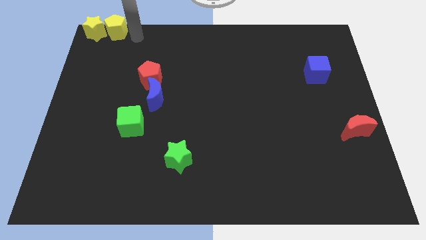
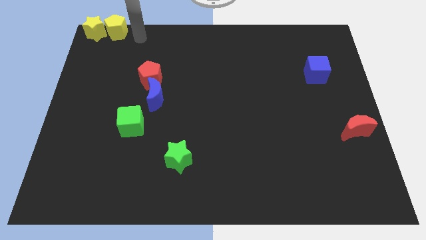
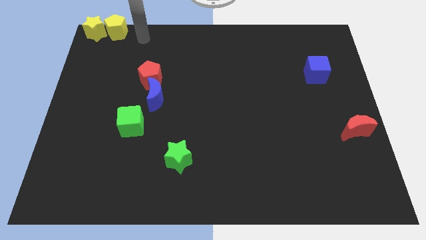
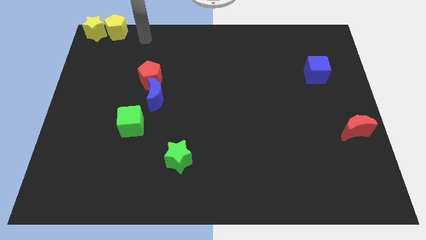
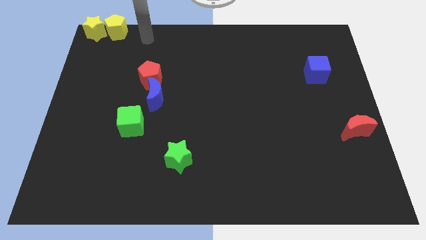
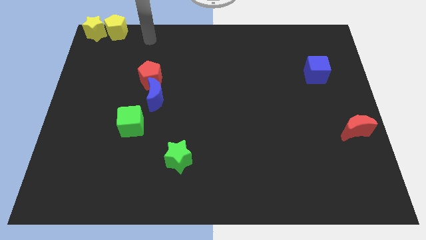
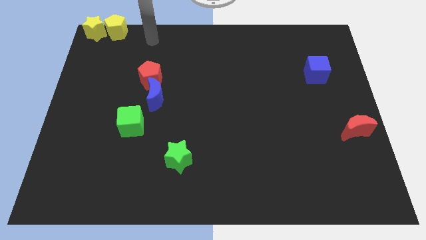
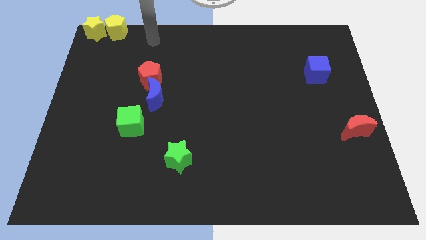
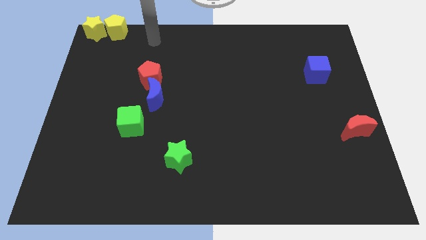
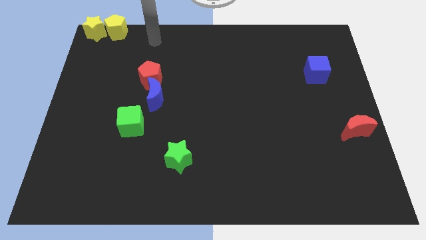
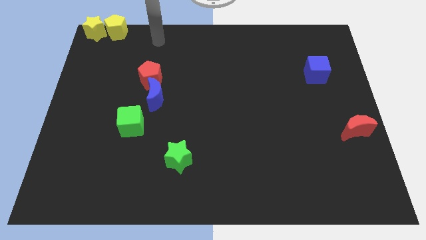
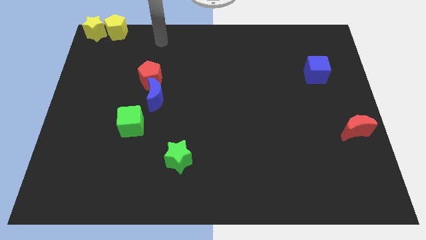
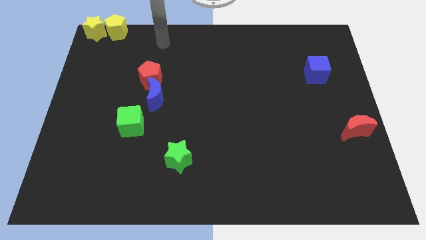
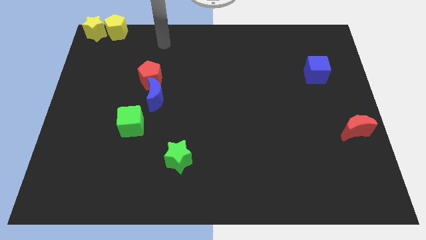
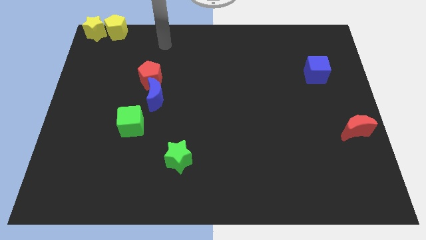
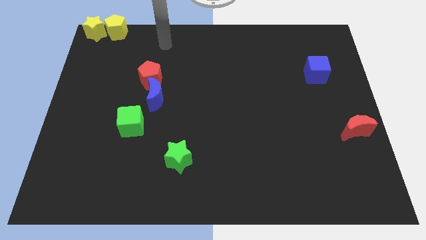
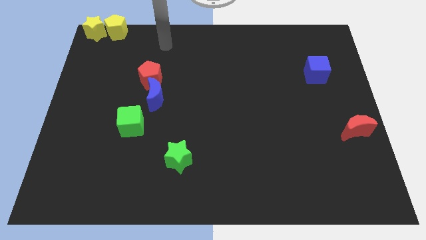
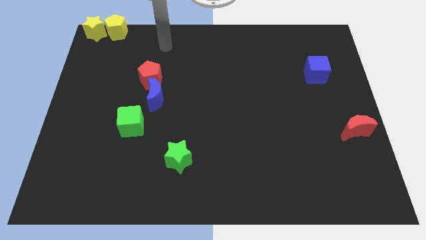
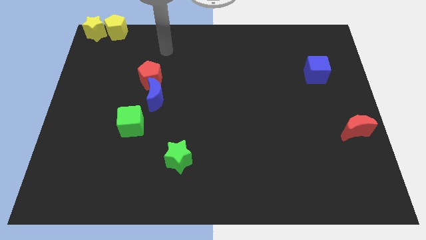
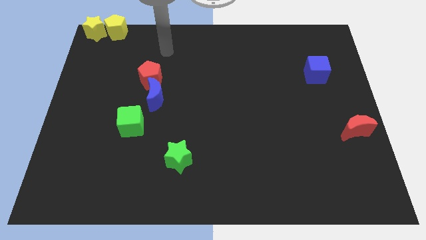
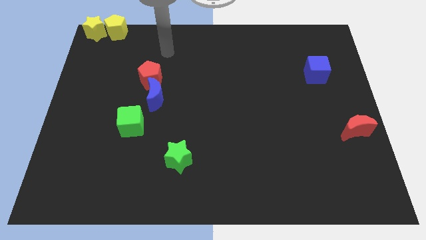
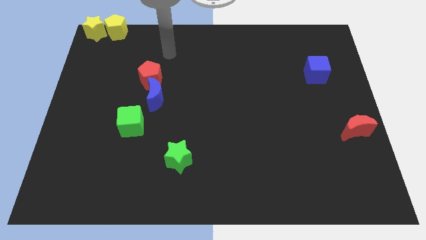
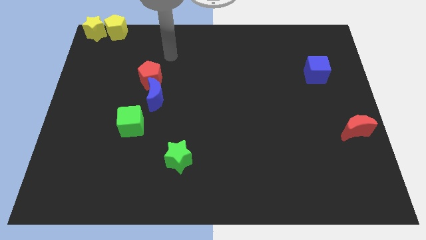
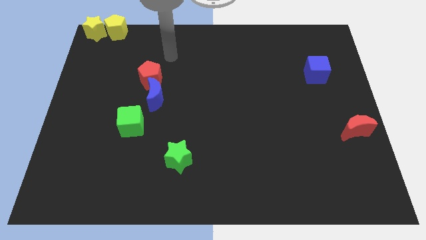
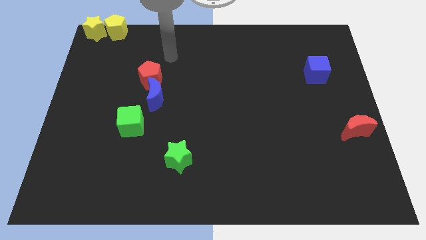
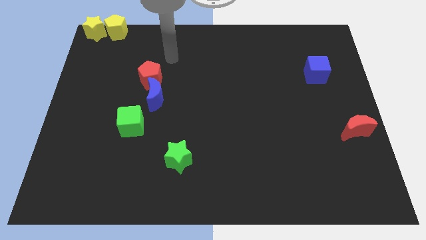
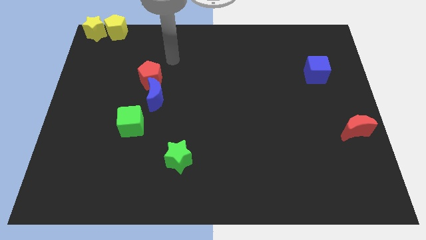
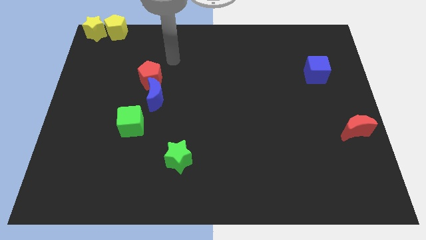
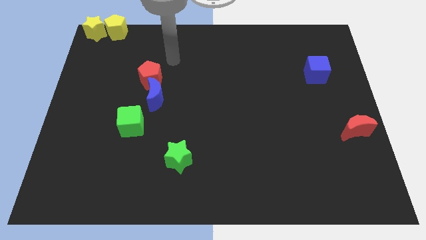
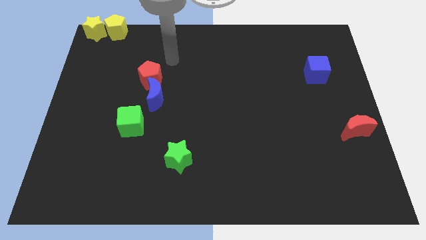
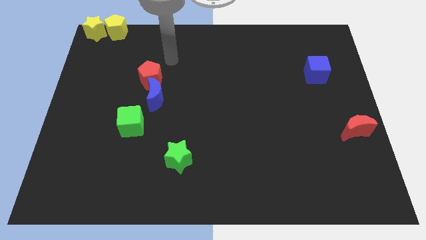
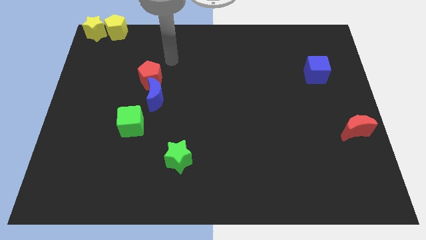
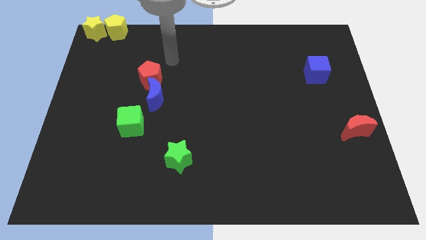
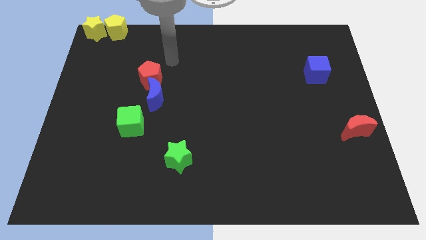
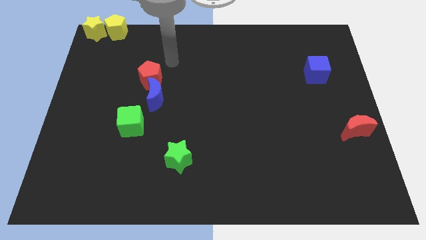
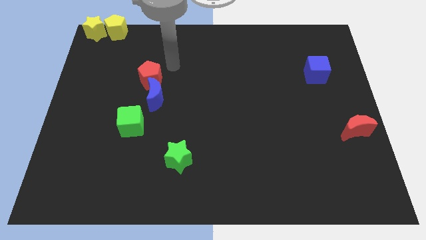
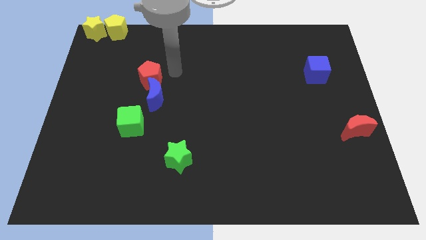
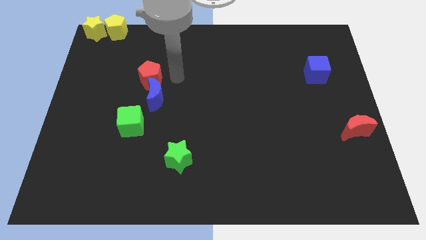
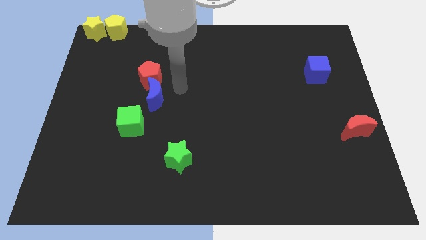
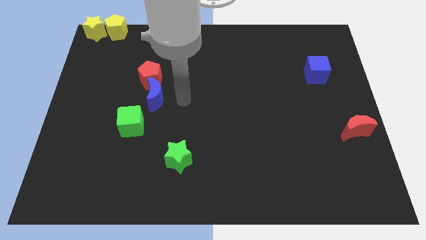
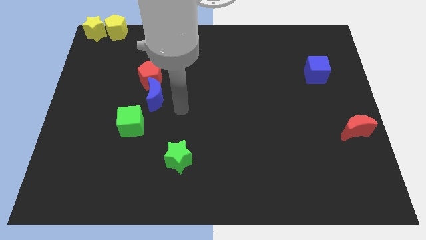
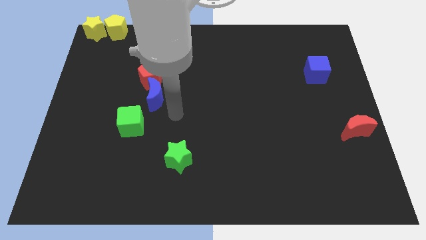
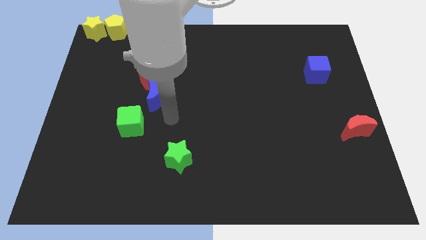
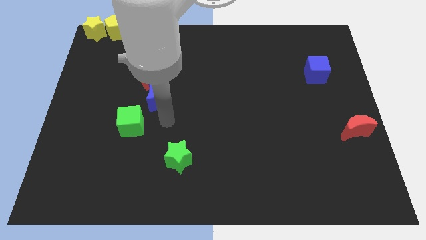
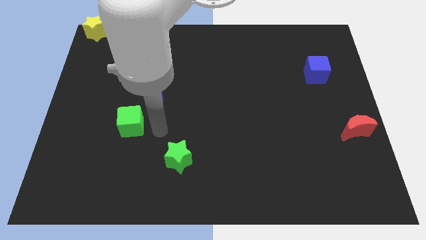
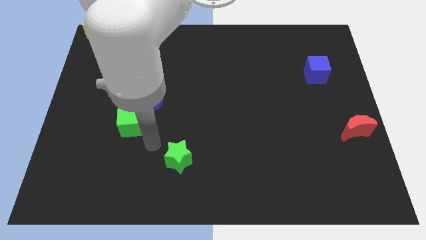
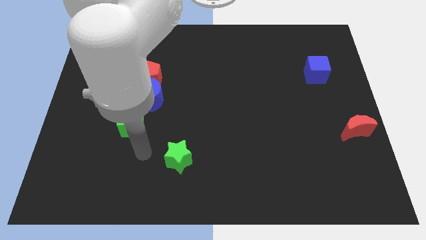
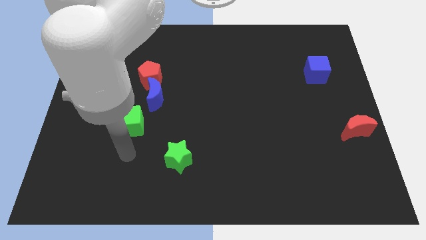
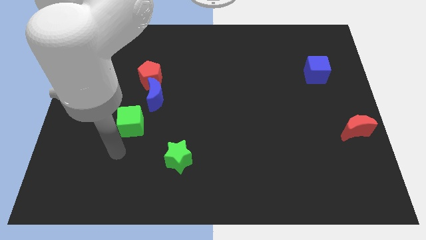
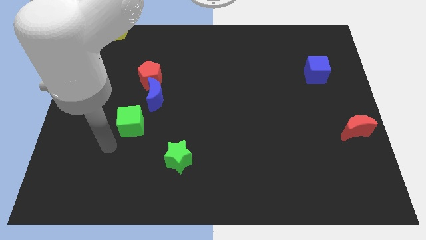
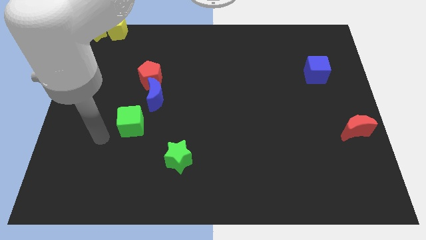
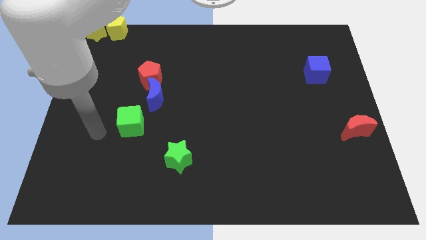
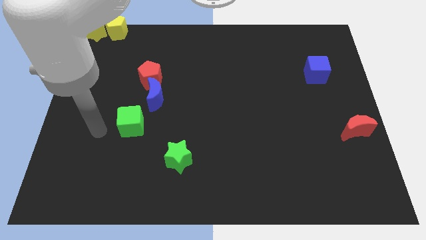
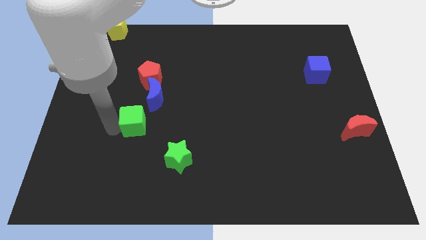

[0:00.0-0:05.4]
move your arm towards the green cube

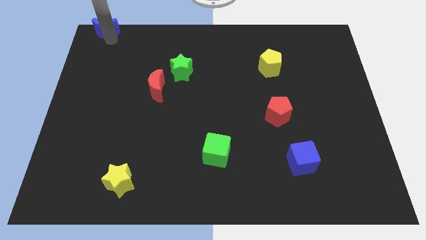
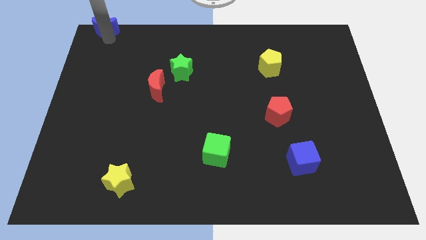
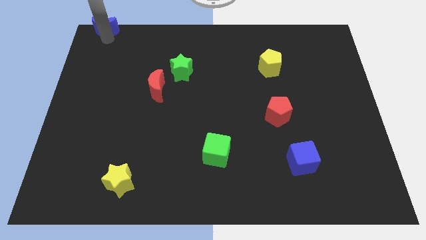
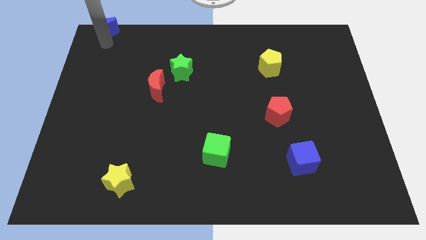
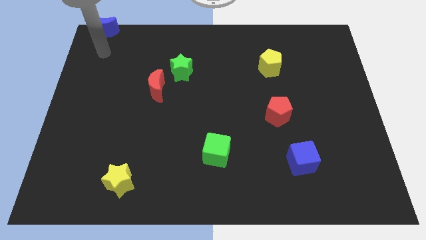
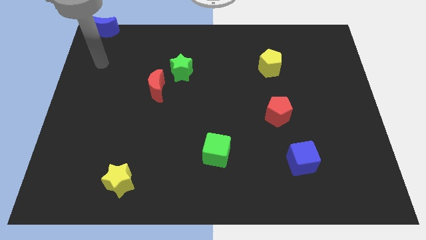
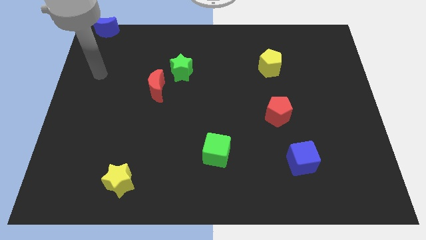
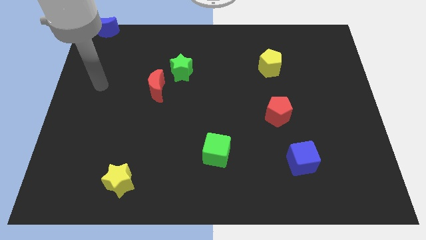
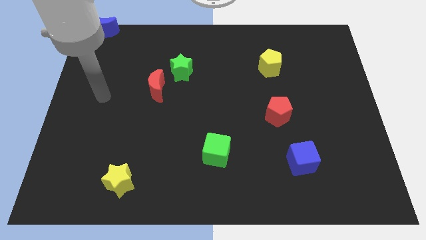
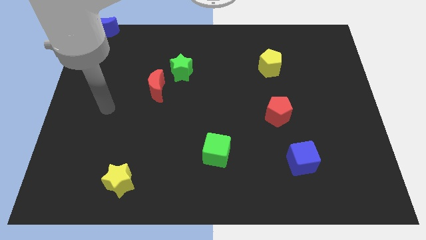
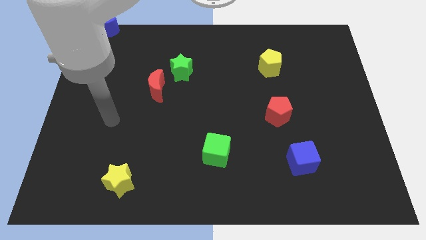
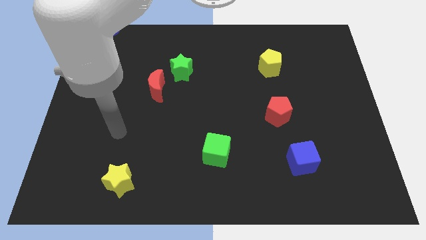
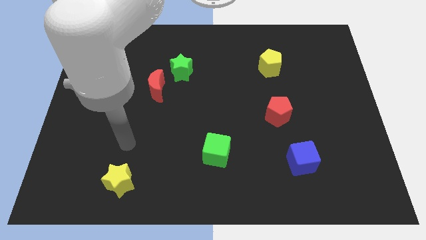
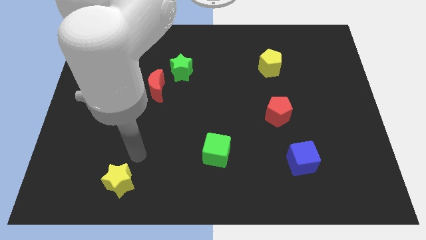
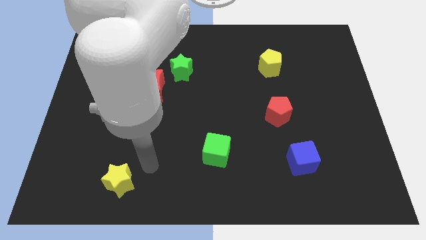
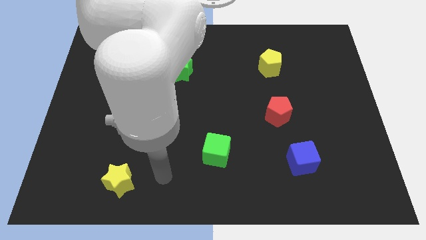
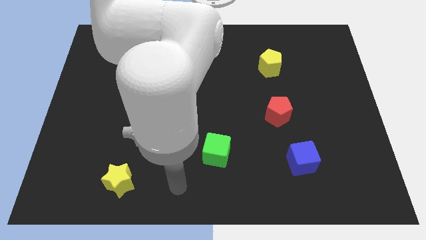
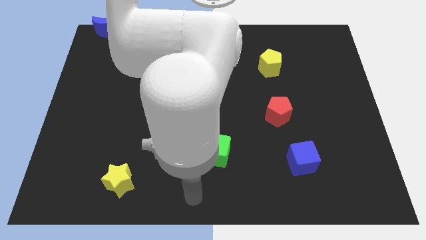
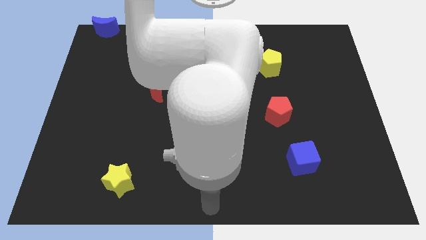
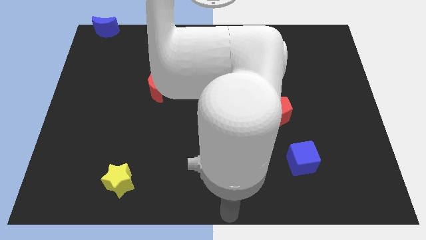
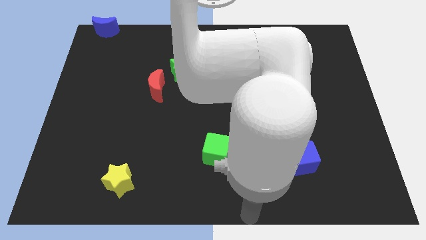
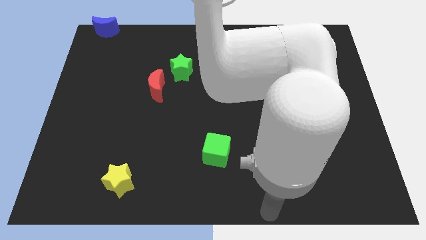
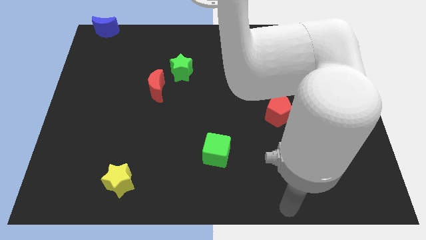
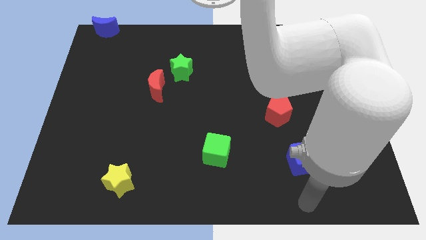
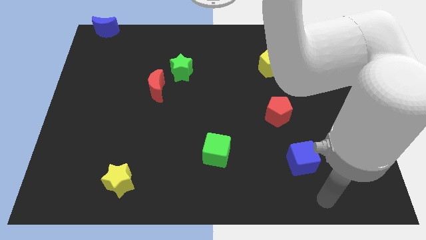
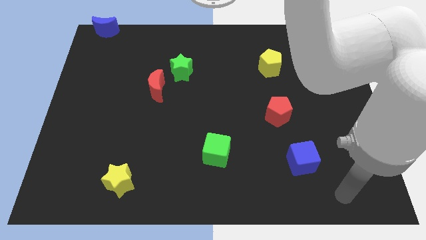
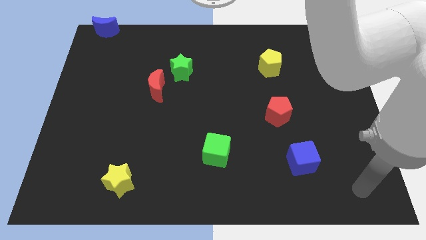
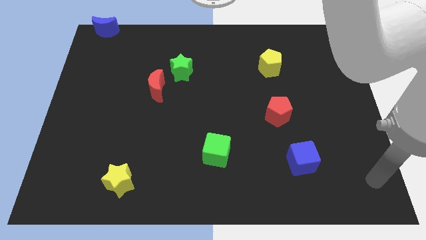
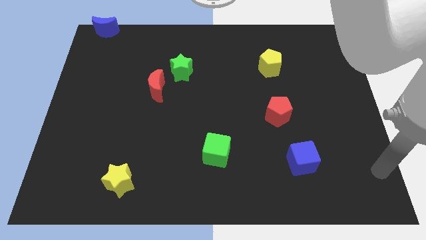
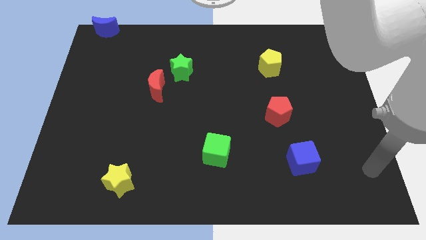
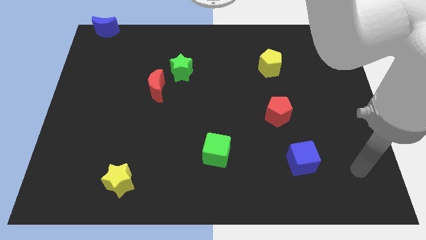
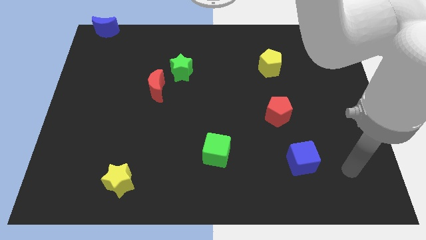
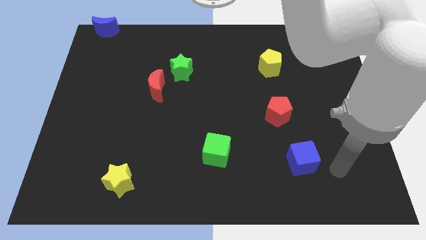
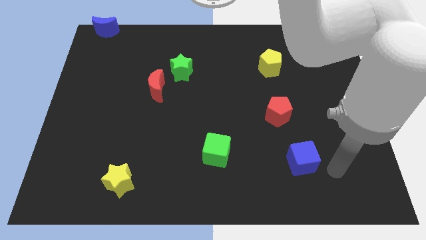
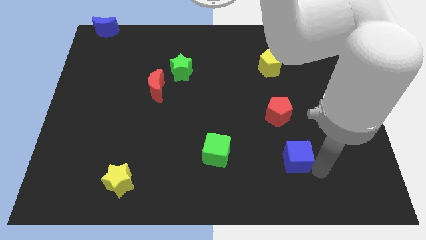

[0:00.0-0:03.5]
move your arm to the bottom right of the blue cube
